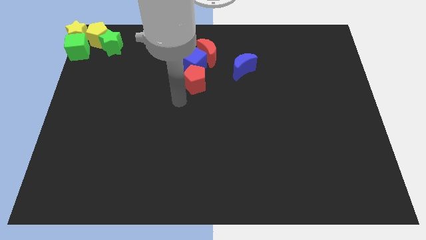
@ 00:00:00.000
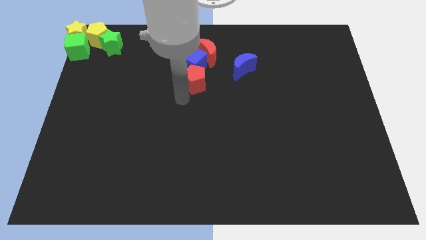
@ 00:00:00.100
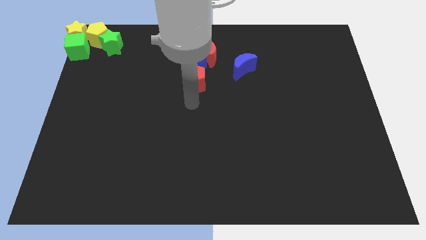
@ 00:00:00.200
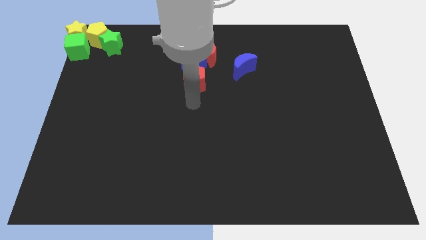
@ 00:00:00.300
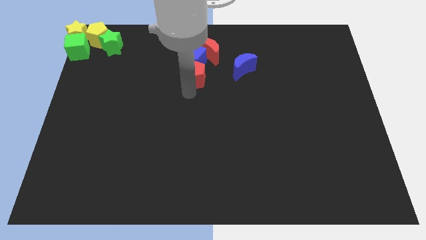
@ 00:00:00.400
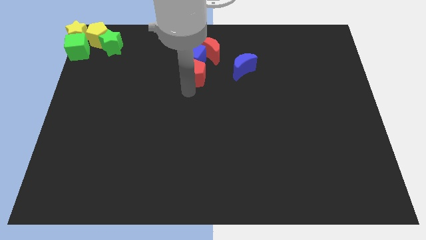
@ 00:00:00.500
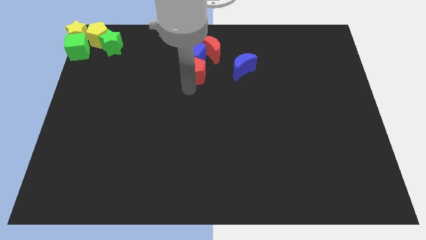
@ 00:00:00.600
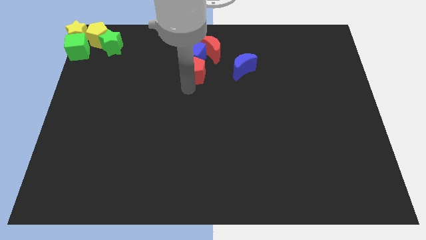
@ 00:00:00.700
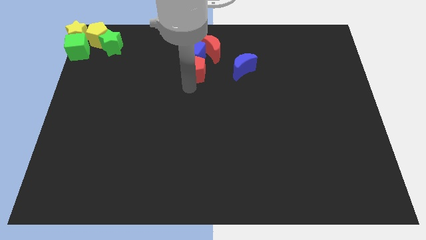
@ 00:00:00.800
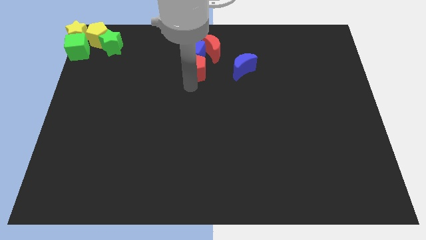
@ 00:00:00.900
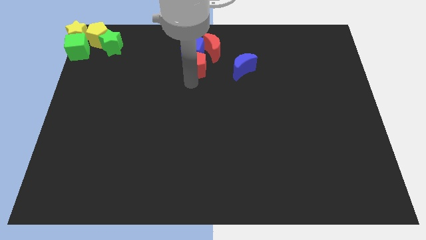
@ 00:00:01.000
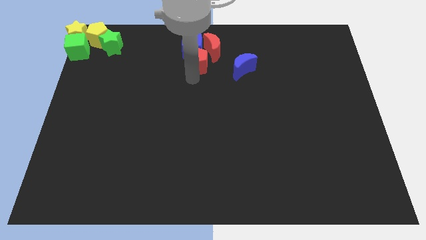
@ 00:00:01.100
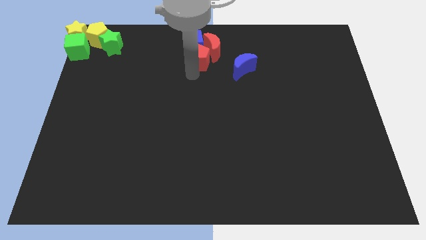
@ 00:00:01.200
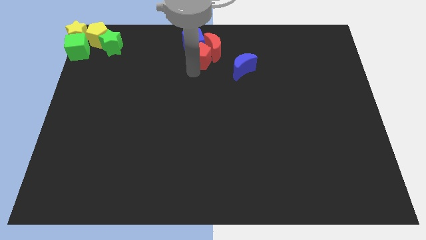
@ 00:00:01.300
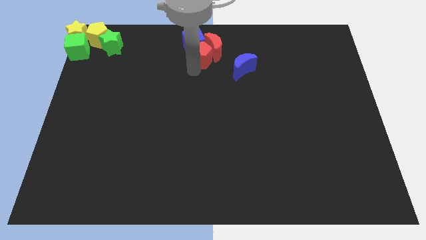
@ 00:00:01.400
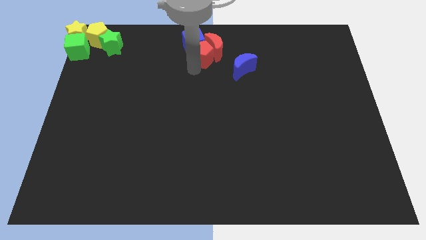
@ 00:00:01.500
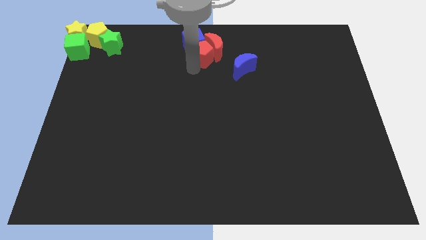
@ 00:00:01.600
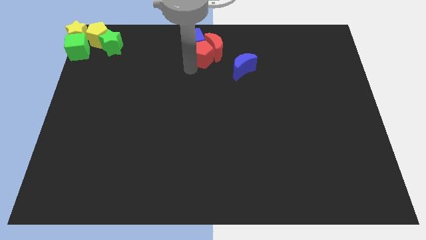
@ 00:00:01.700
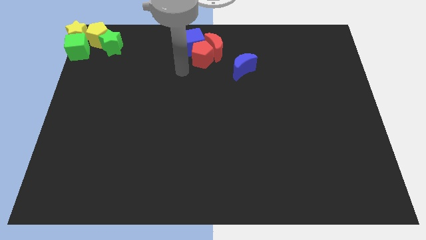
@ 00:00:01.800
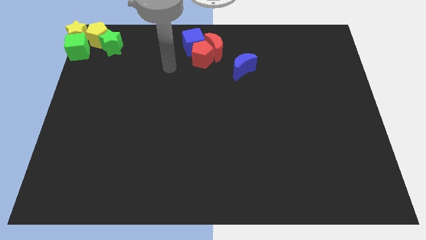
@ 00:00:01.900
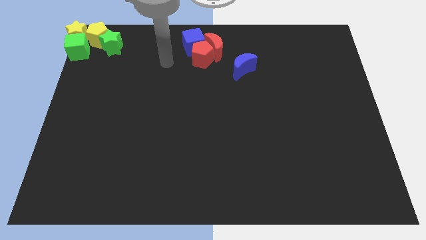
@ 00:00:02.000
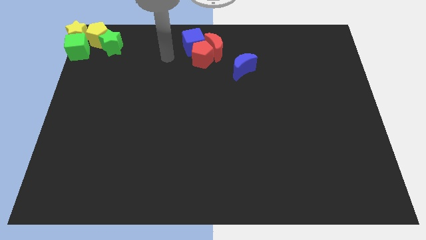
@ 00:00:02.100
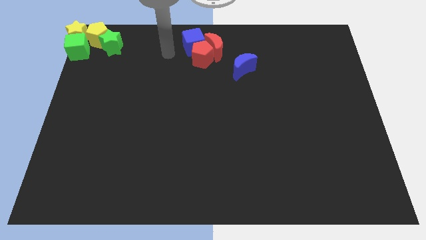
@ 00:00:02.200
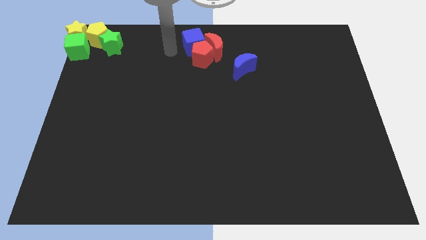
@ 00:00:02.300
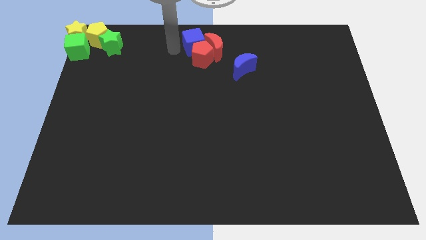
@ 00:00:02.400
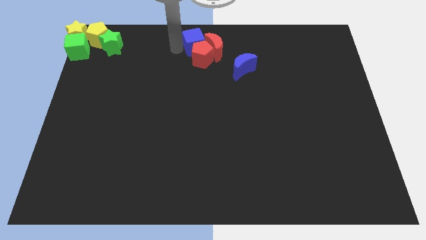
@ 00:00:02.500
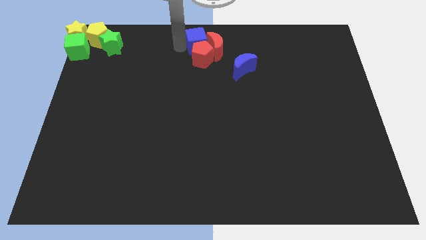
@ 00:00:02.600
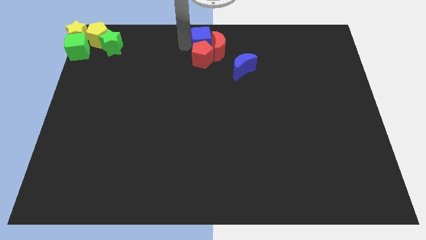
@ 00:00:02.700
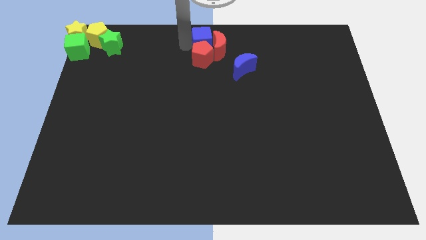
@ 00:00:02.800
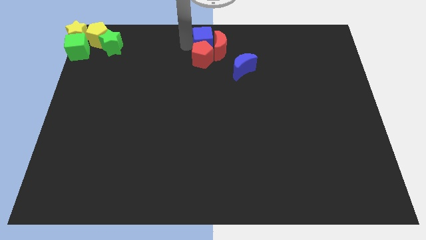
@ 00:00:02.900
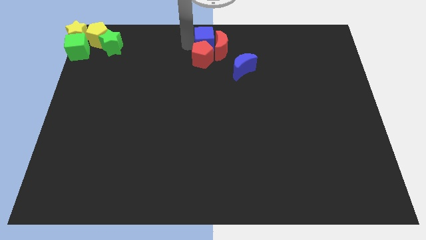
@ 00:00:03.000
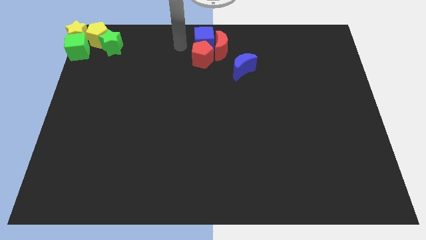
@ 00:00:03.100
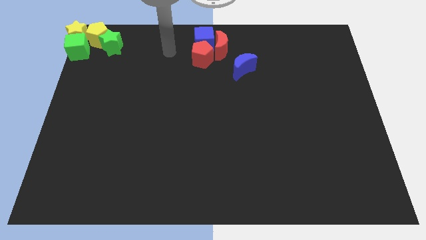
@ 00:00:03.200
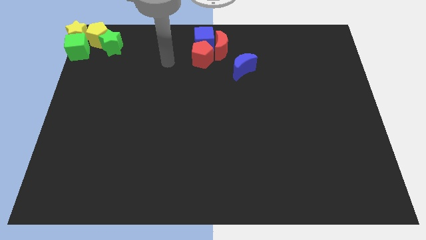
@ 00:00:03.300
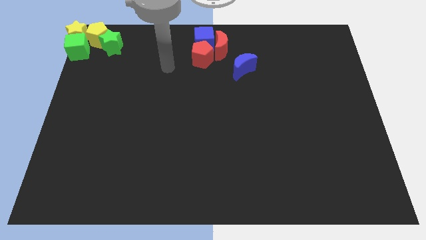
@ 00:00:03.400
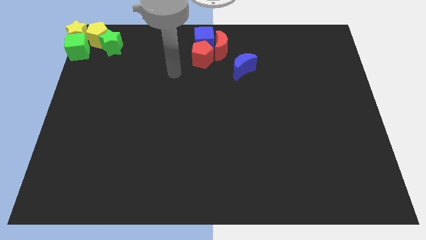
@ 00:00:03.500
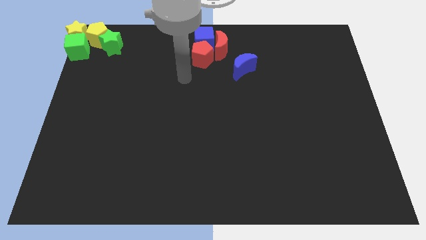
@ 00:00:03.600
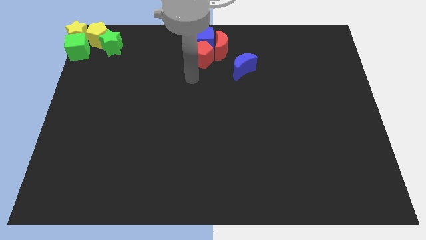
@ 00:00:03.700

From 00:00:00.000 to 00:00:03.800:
push red pentagon slightly upwards

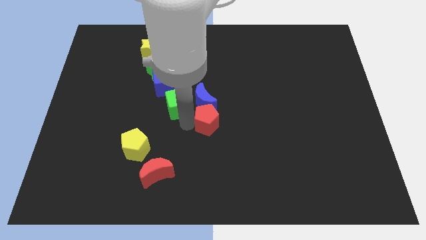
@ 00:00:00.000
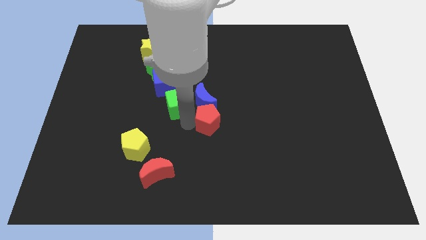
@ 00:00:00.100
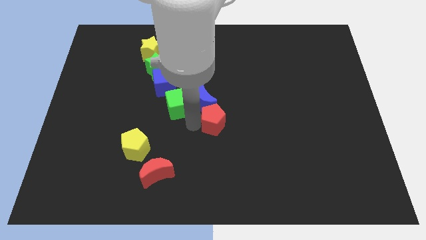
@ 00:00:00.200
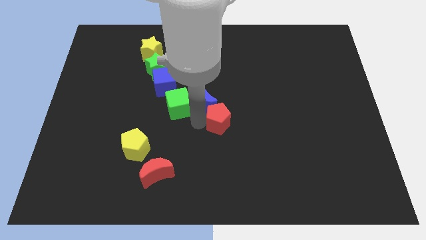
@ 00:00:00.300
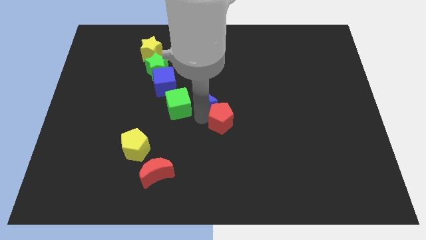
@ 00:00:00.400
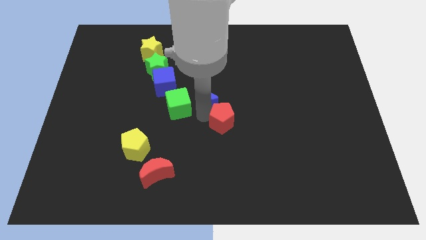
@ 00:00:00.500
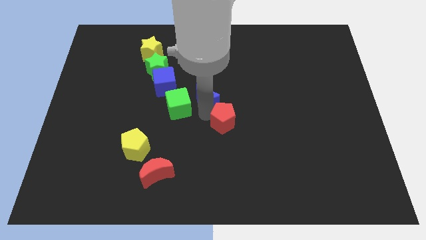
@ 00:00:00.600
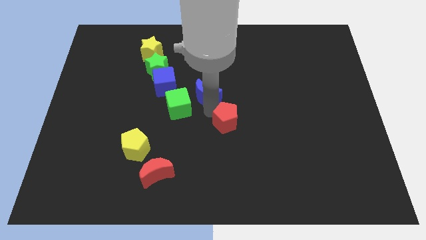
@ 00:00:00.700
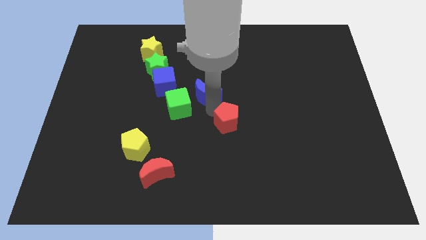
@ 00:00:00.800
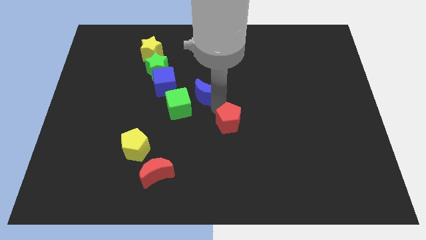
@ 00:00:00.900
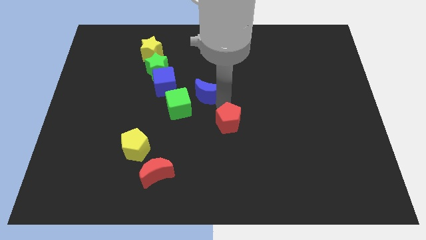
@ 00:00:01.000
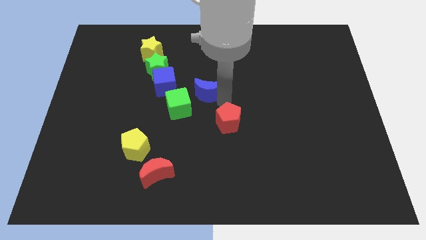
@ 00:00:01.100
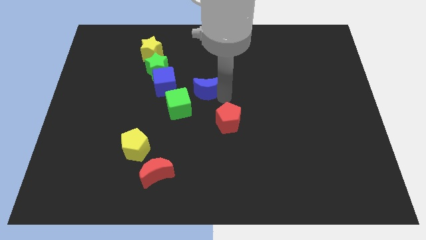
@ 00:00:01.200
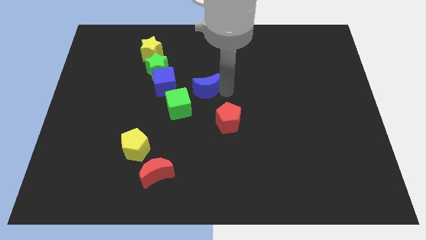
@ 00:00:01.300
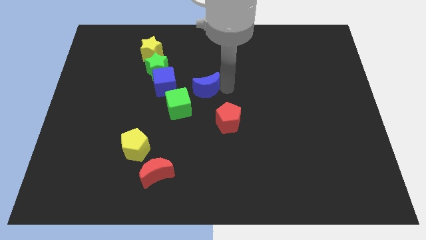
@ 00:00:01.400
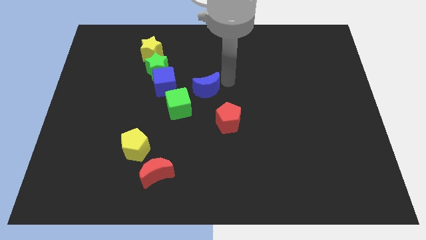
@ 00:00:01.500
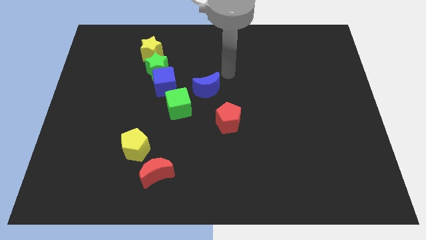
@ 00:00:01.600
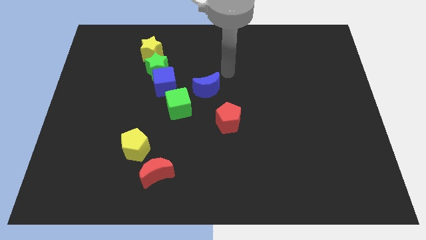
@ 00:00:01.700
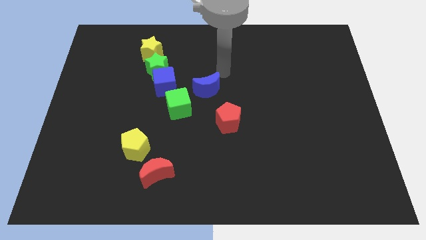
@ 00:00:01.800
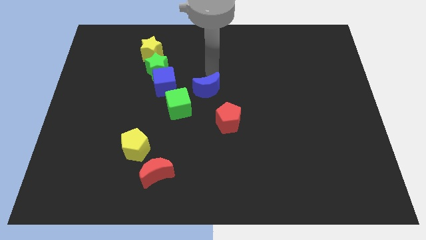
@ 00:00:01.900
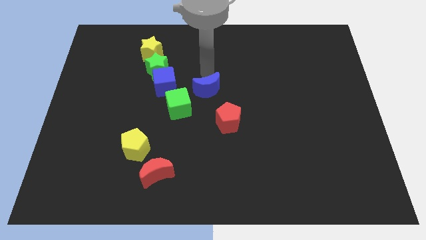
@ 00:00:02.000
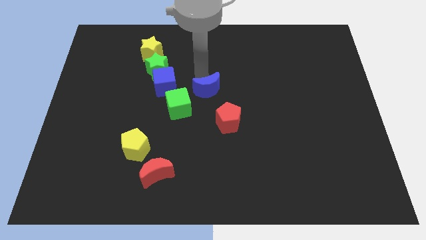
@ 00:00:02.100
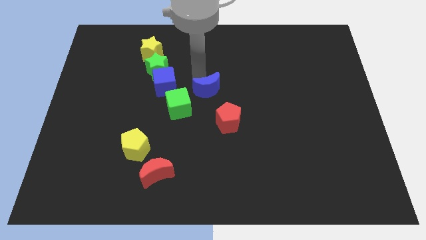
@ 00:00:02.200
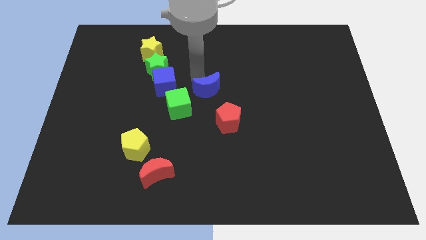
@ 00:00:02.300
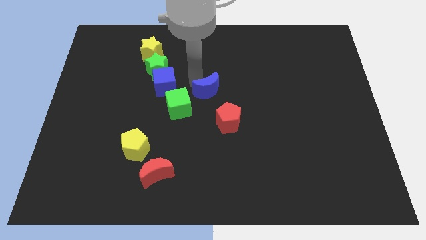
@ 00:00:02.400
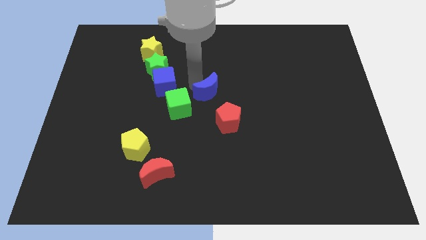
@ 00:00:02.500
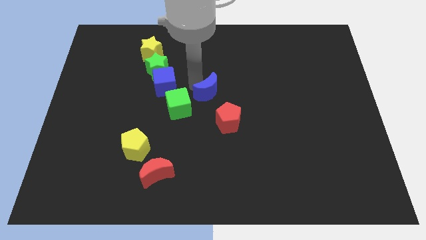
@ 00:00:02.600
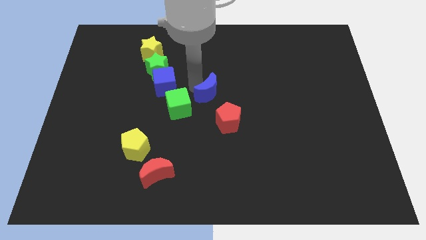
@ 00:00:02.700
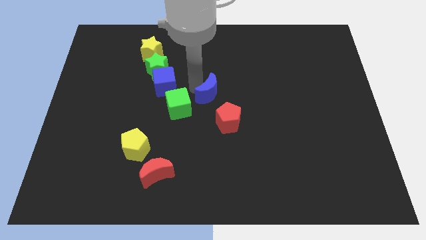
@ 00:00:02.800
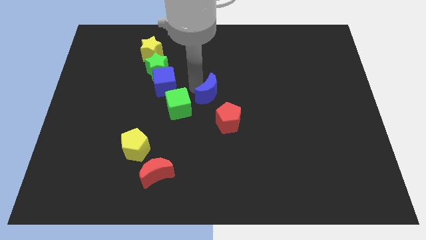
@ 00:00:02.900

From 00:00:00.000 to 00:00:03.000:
separate blue moon and red pentagon

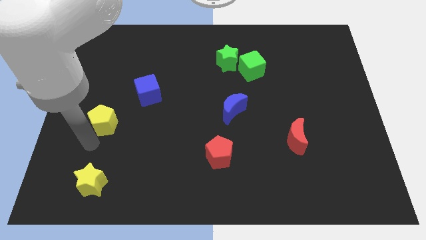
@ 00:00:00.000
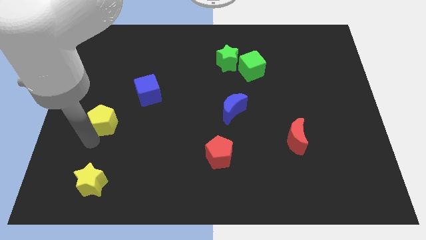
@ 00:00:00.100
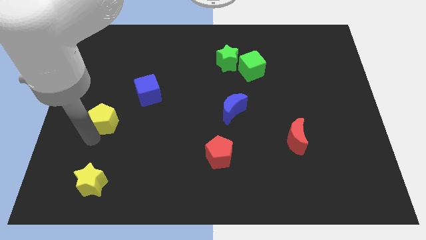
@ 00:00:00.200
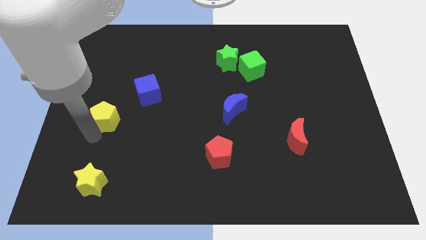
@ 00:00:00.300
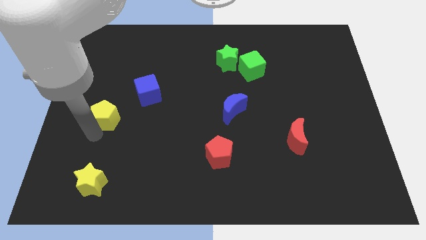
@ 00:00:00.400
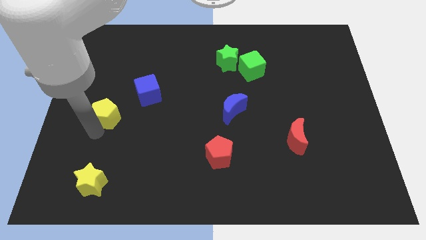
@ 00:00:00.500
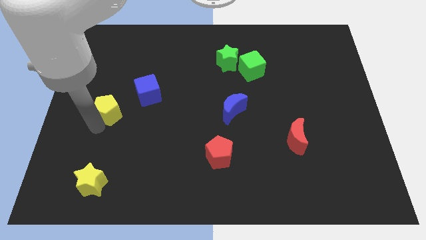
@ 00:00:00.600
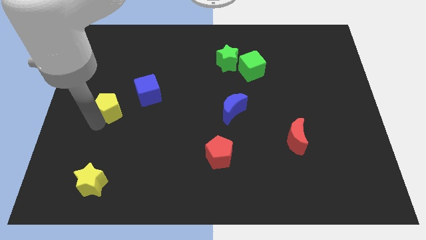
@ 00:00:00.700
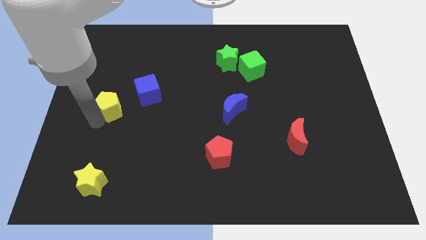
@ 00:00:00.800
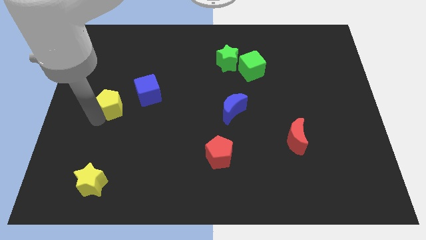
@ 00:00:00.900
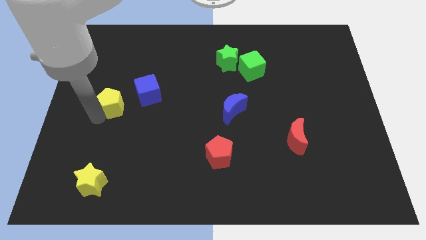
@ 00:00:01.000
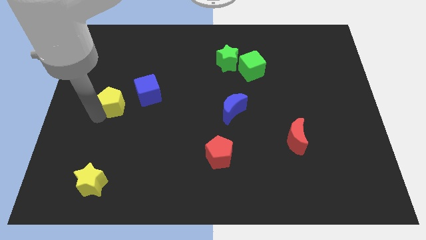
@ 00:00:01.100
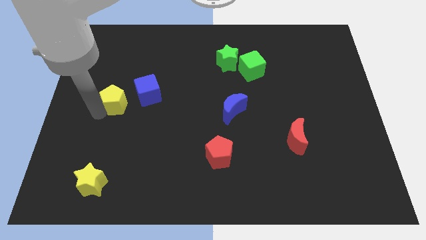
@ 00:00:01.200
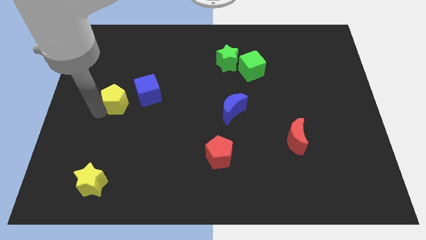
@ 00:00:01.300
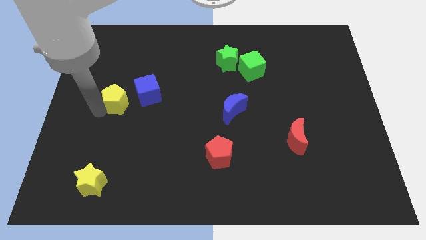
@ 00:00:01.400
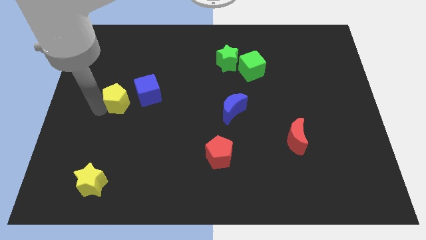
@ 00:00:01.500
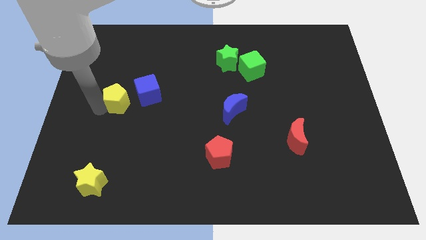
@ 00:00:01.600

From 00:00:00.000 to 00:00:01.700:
push the yellow pentagon to the left of the blue cube

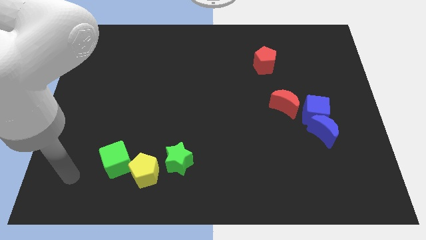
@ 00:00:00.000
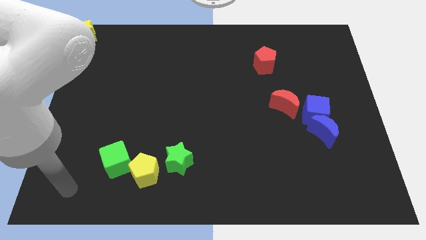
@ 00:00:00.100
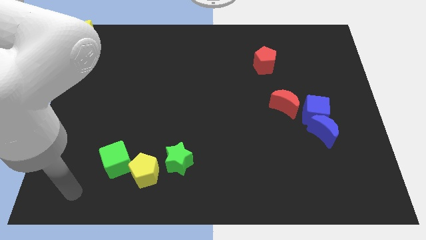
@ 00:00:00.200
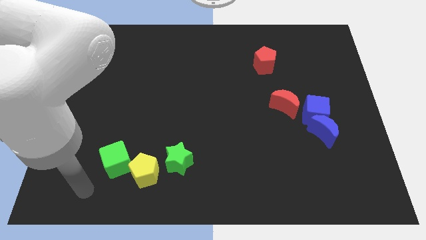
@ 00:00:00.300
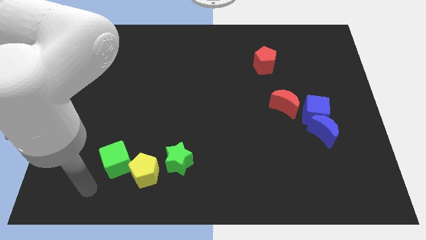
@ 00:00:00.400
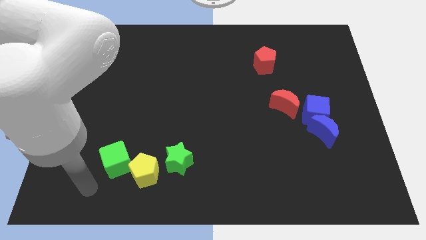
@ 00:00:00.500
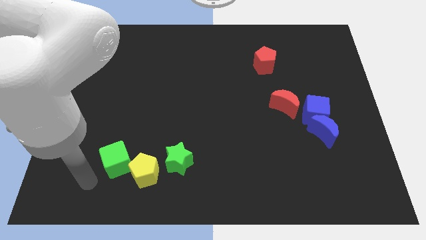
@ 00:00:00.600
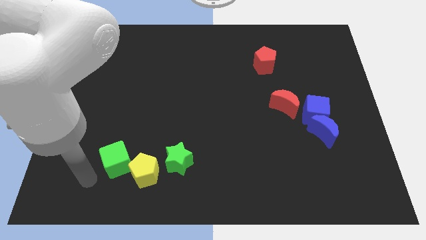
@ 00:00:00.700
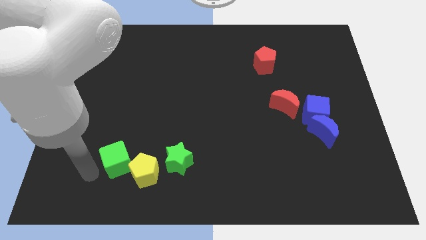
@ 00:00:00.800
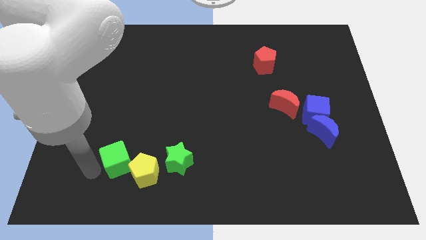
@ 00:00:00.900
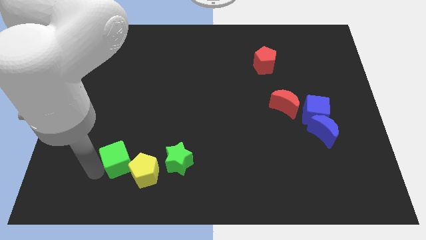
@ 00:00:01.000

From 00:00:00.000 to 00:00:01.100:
touch the left side of the green cube
